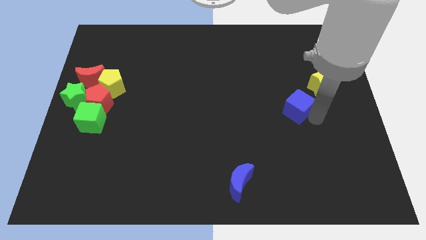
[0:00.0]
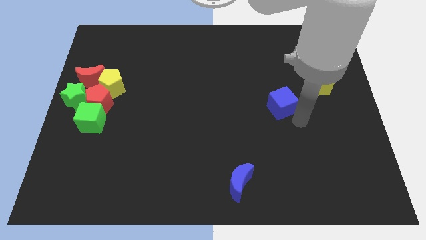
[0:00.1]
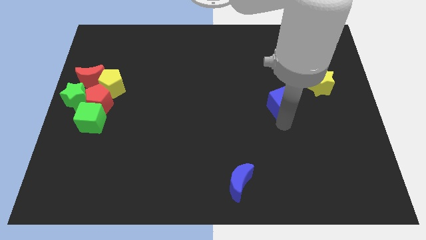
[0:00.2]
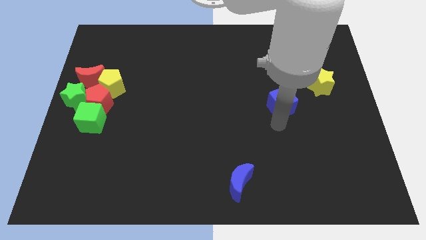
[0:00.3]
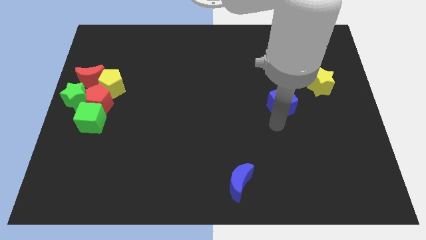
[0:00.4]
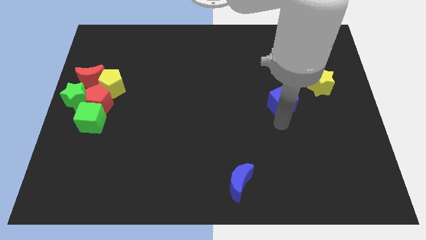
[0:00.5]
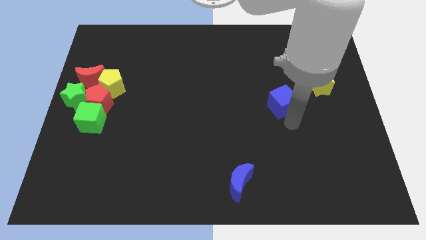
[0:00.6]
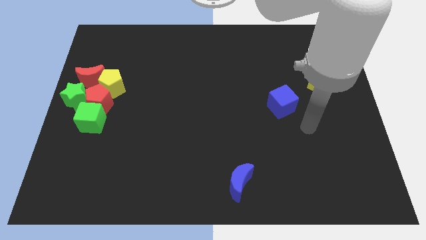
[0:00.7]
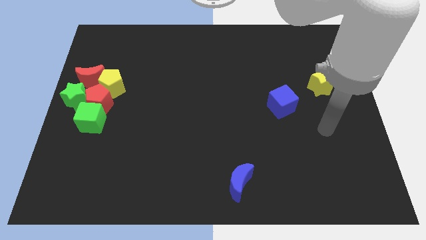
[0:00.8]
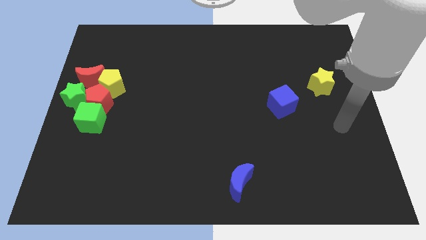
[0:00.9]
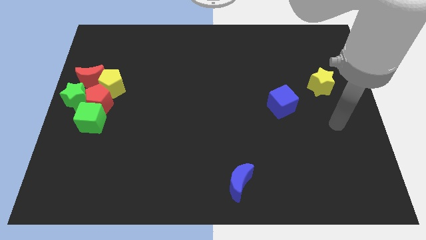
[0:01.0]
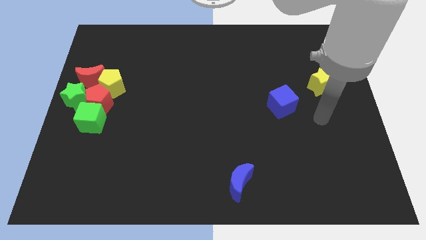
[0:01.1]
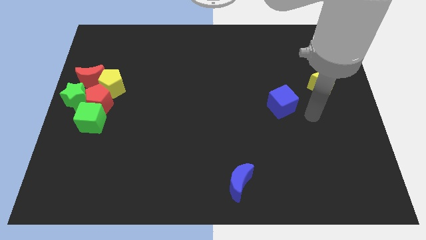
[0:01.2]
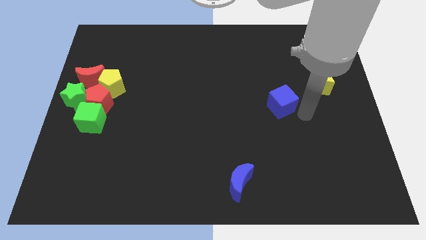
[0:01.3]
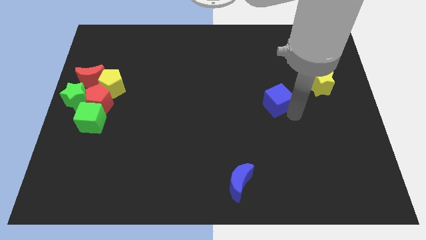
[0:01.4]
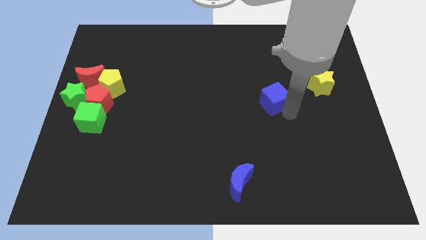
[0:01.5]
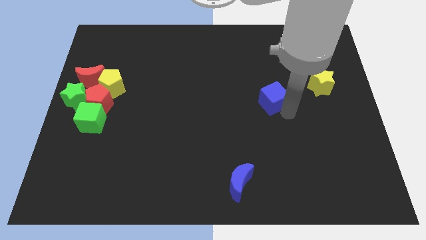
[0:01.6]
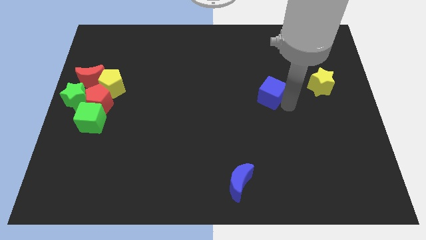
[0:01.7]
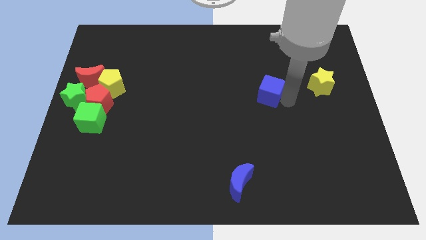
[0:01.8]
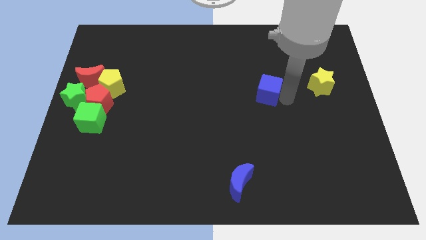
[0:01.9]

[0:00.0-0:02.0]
move the blue cube parallel to the yellow star

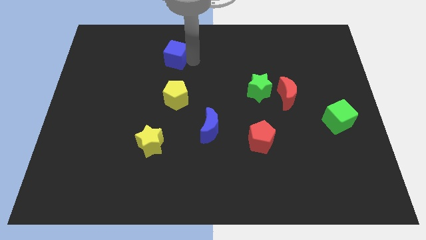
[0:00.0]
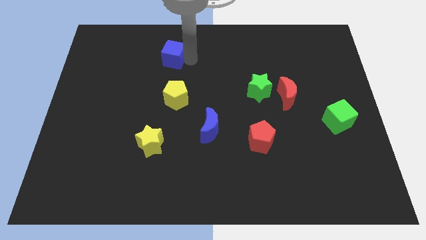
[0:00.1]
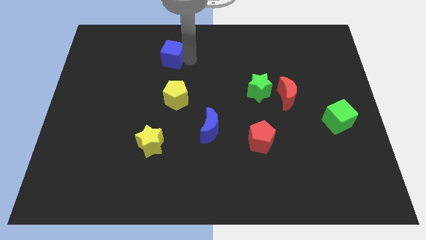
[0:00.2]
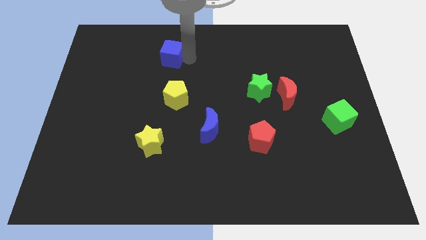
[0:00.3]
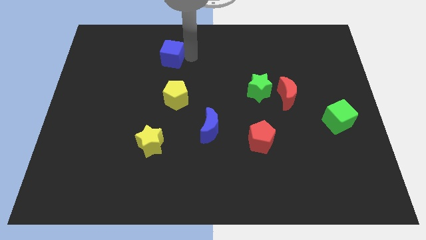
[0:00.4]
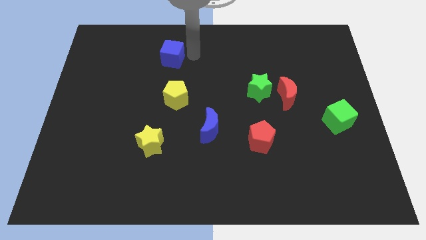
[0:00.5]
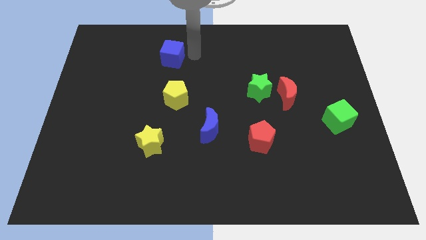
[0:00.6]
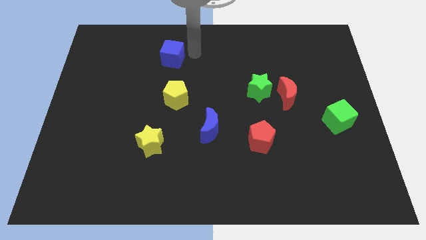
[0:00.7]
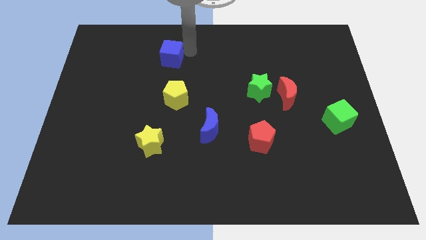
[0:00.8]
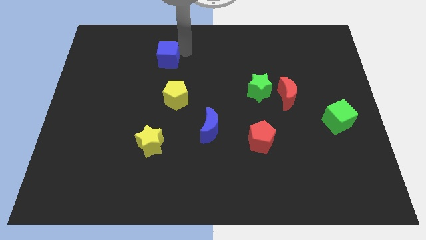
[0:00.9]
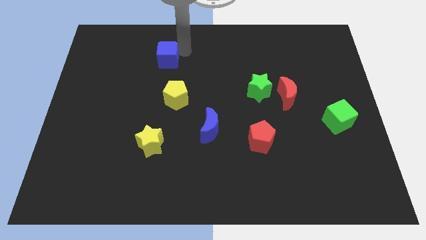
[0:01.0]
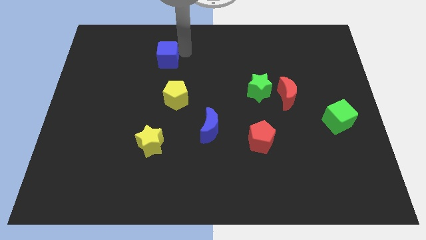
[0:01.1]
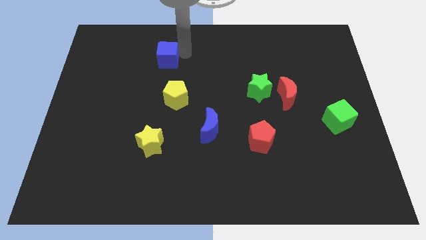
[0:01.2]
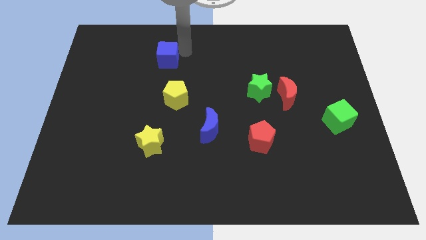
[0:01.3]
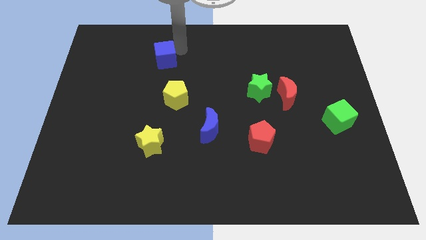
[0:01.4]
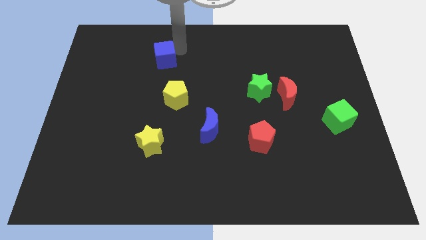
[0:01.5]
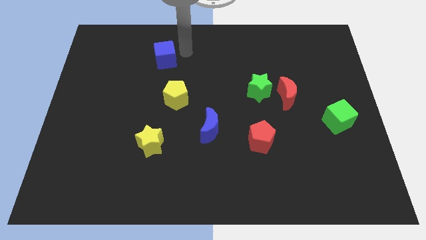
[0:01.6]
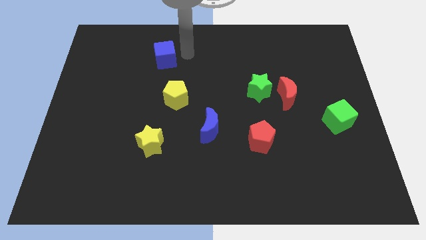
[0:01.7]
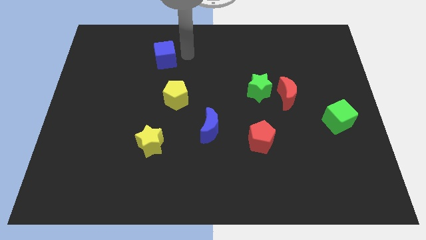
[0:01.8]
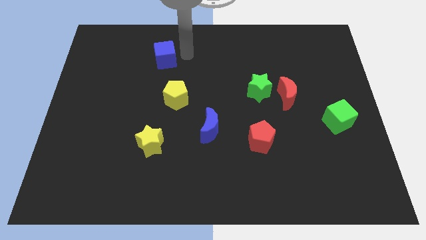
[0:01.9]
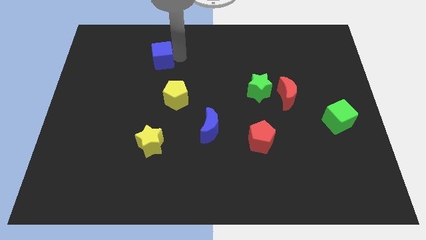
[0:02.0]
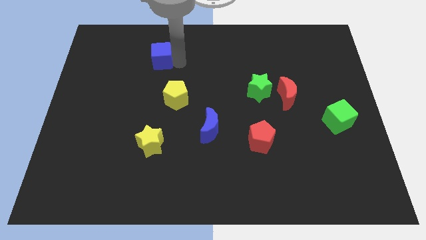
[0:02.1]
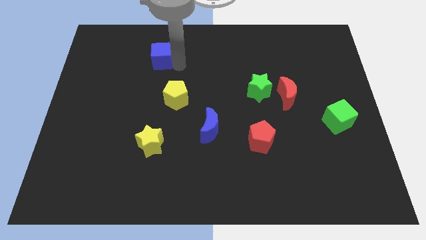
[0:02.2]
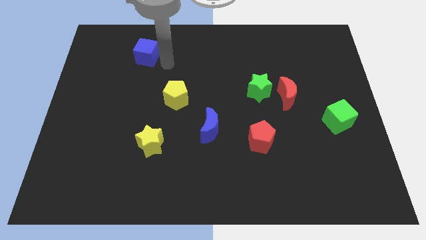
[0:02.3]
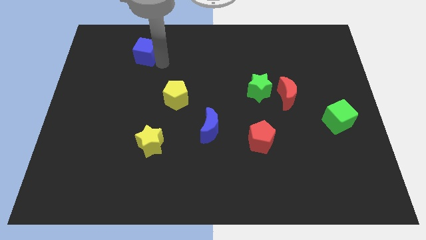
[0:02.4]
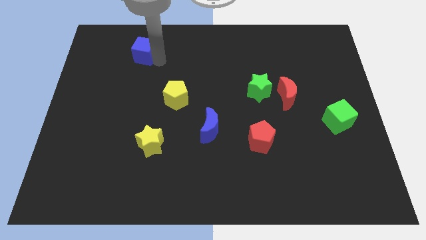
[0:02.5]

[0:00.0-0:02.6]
push the blue cube to the left

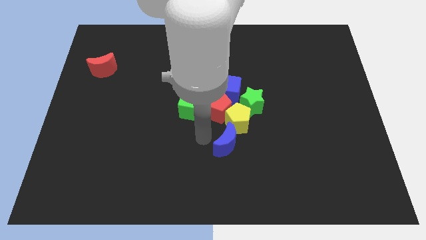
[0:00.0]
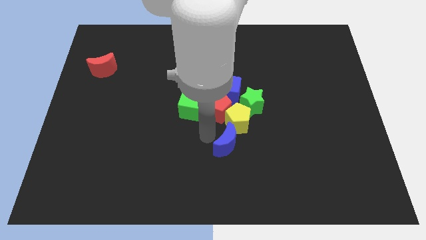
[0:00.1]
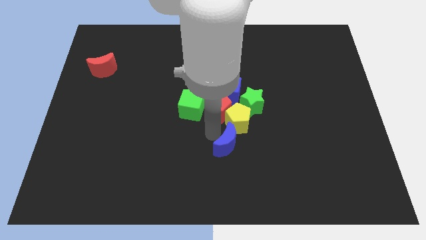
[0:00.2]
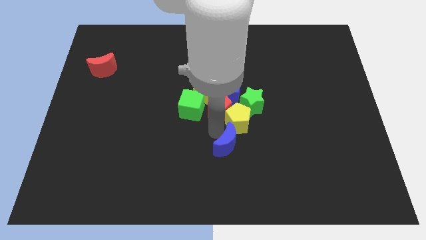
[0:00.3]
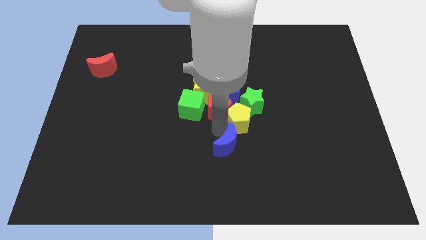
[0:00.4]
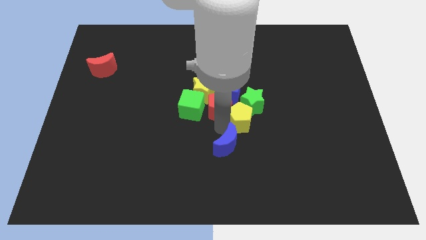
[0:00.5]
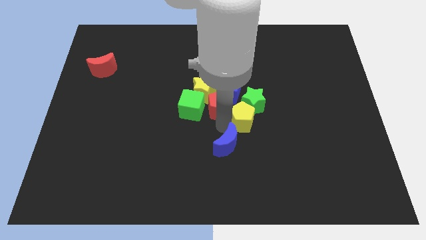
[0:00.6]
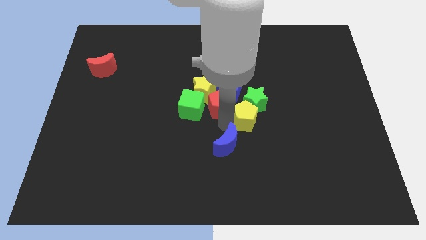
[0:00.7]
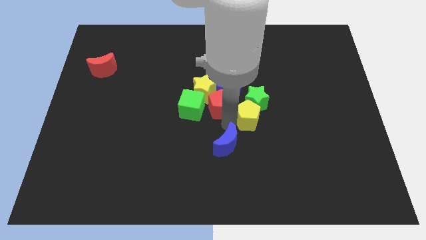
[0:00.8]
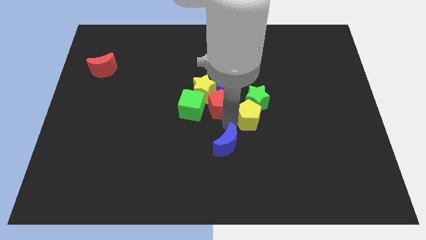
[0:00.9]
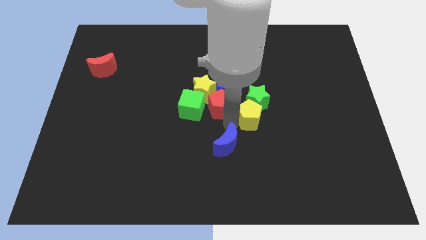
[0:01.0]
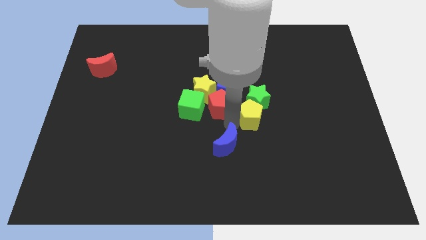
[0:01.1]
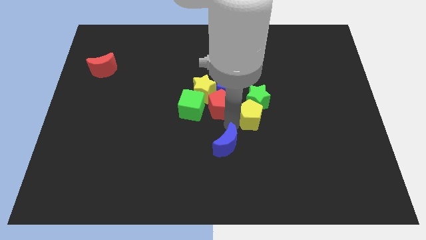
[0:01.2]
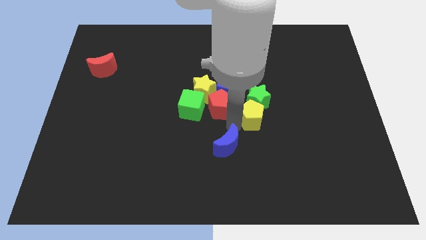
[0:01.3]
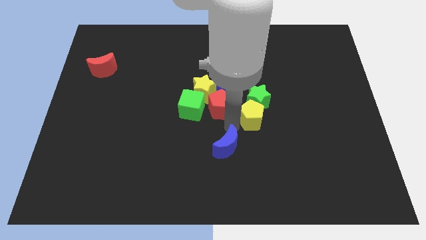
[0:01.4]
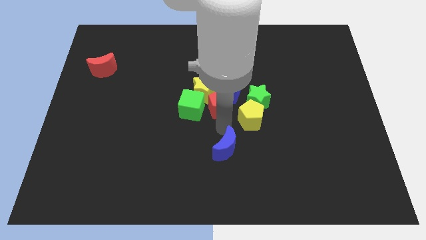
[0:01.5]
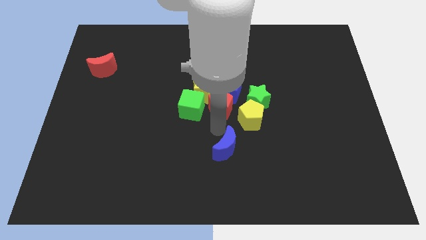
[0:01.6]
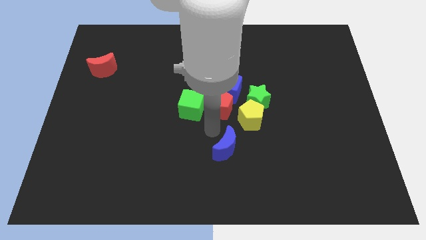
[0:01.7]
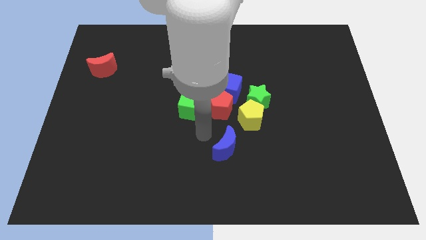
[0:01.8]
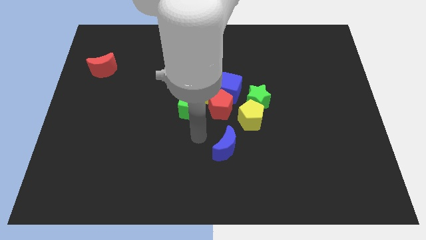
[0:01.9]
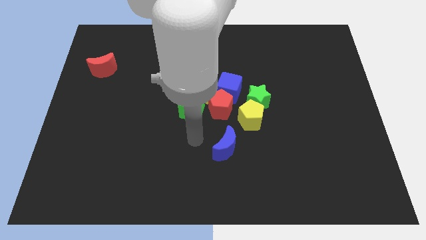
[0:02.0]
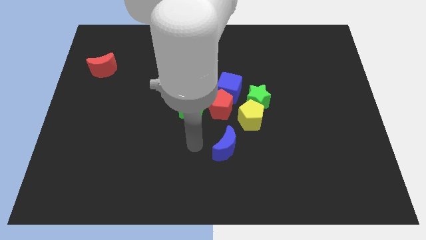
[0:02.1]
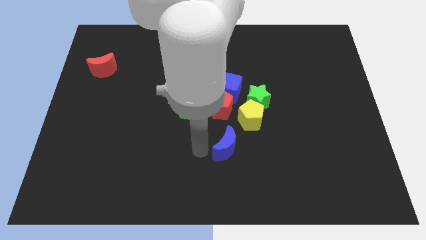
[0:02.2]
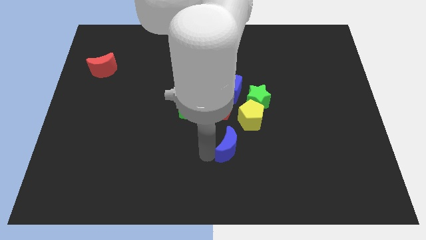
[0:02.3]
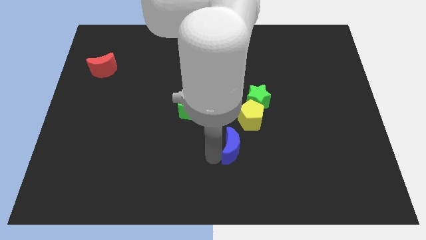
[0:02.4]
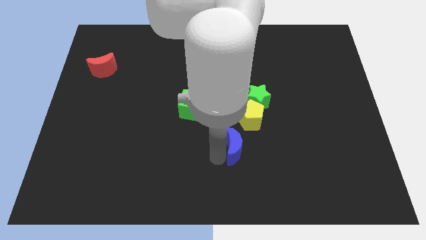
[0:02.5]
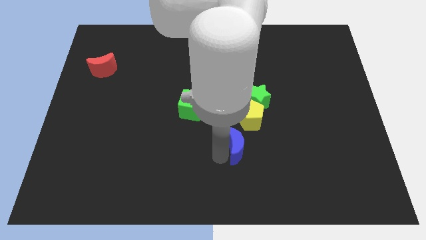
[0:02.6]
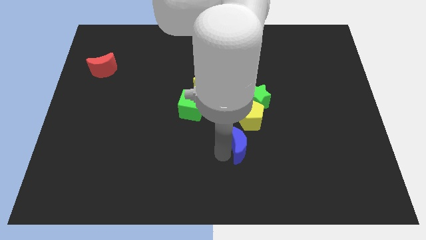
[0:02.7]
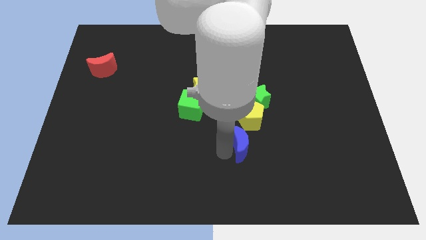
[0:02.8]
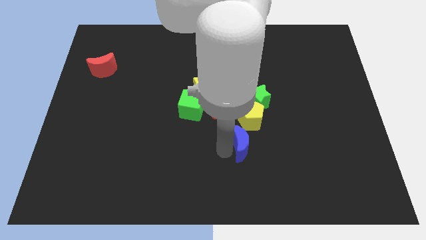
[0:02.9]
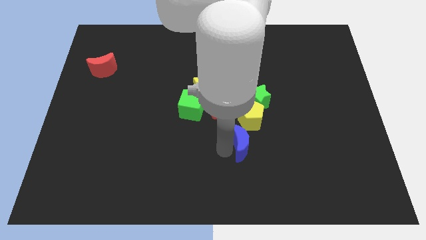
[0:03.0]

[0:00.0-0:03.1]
move the yellow pentagon into the green star

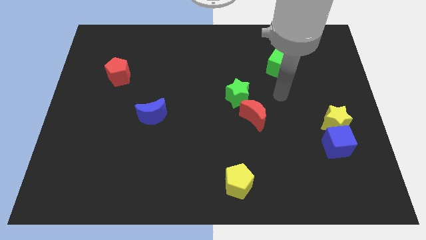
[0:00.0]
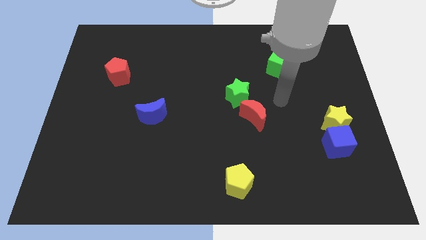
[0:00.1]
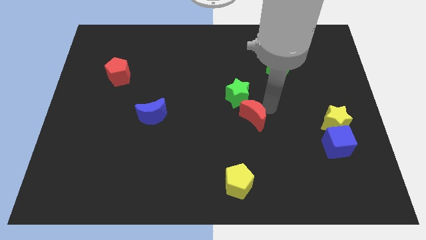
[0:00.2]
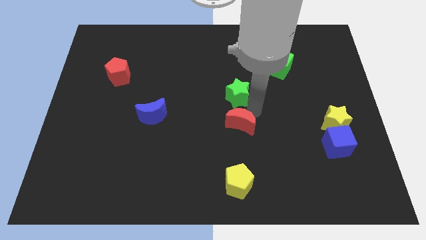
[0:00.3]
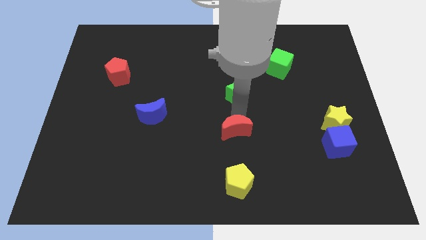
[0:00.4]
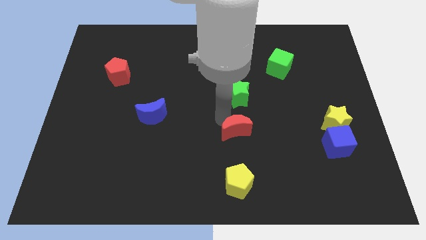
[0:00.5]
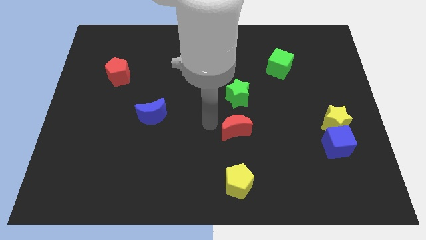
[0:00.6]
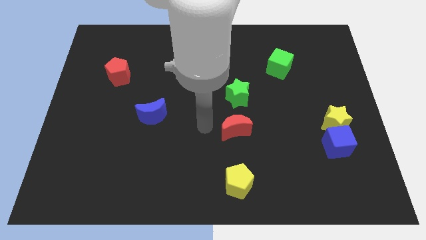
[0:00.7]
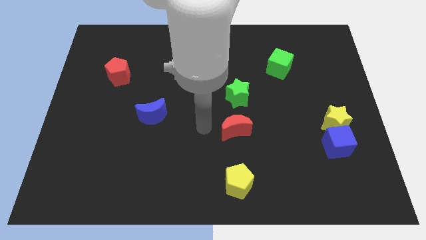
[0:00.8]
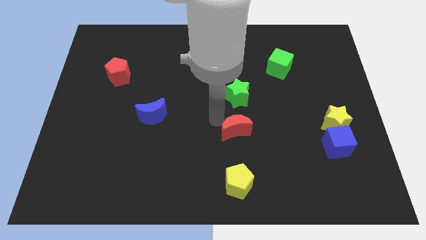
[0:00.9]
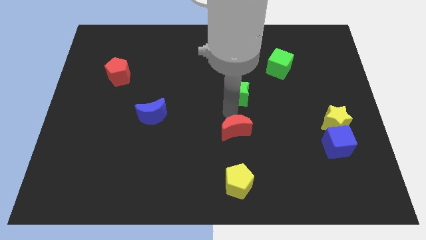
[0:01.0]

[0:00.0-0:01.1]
separate the red crescent from the green star

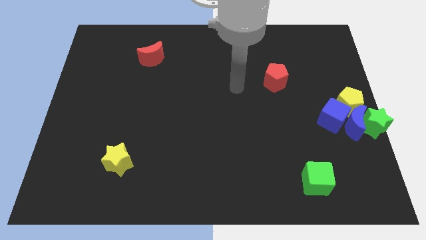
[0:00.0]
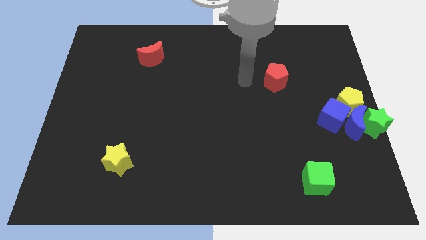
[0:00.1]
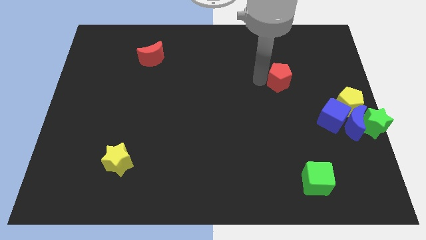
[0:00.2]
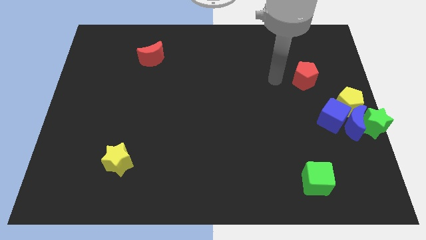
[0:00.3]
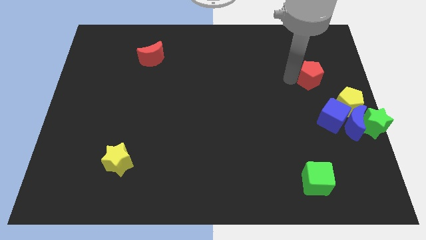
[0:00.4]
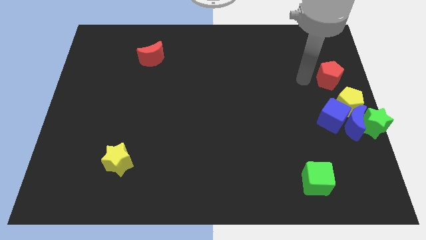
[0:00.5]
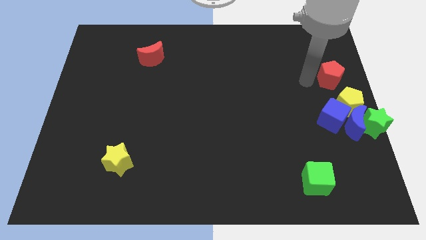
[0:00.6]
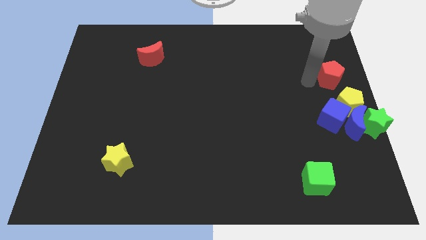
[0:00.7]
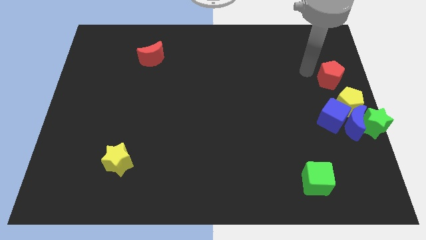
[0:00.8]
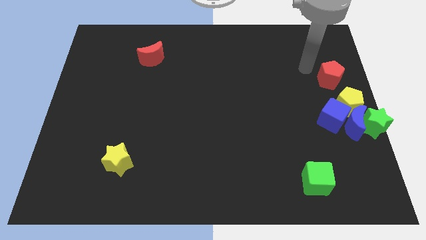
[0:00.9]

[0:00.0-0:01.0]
move the red pentagon above the group of blocks
